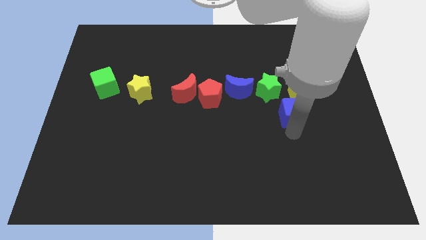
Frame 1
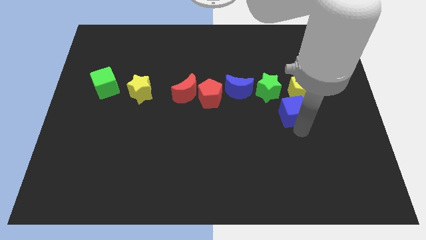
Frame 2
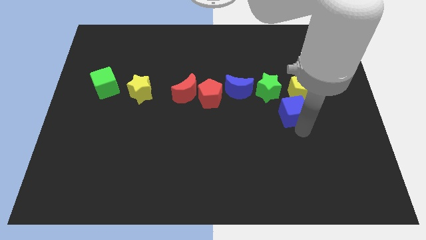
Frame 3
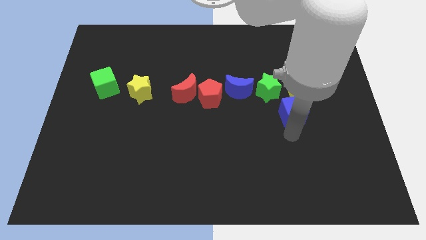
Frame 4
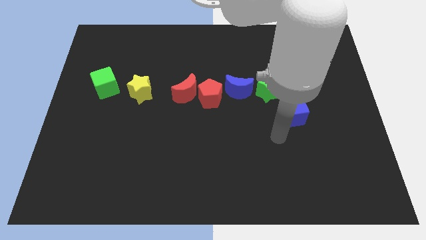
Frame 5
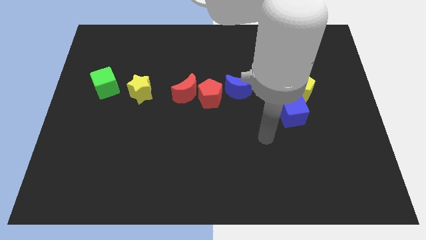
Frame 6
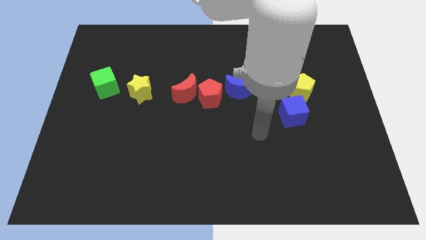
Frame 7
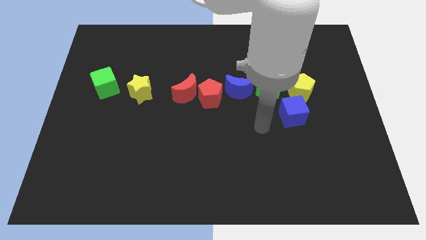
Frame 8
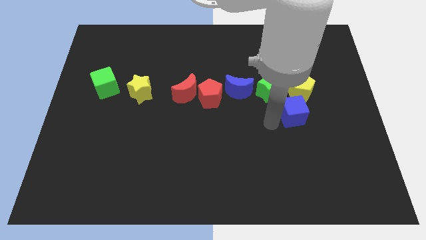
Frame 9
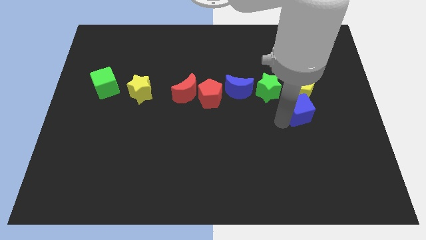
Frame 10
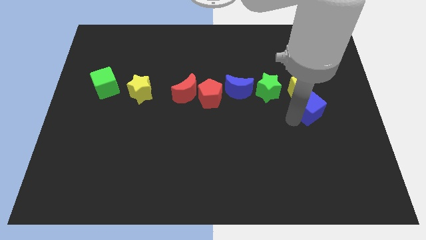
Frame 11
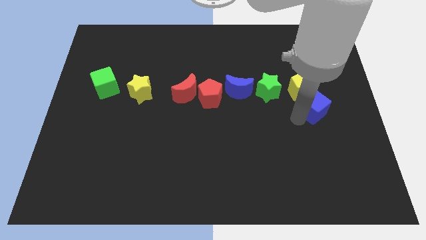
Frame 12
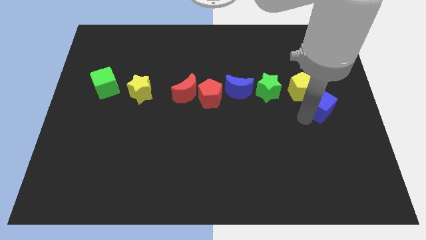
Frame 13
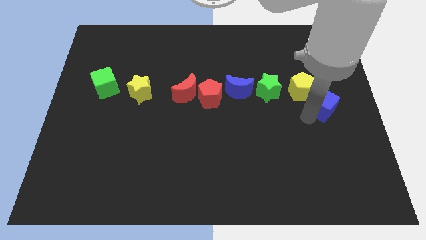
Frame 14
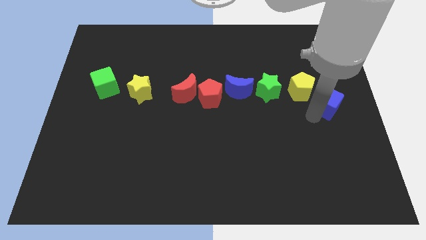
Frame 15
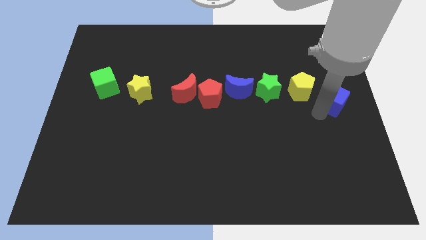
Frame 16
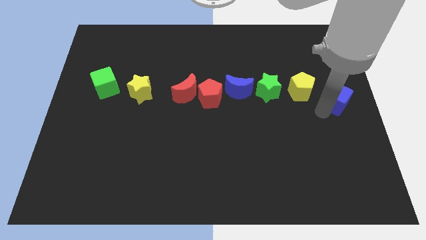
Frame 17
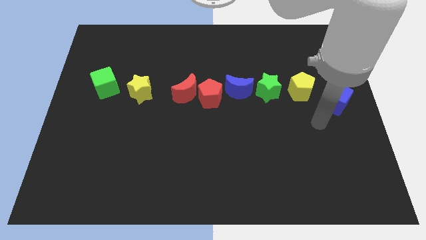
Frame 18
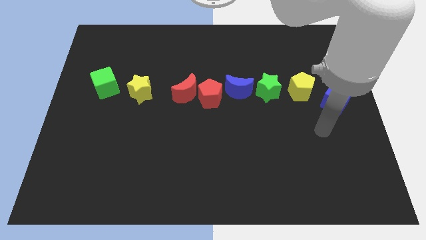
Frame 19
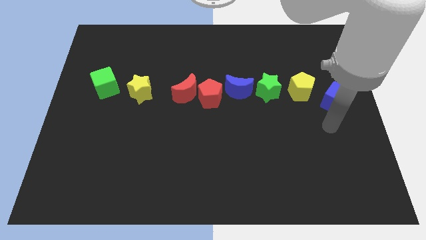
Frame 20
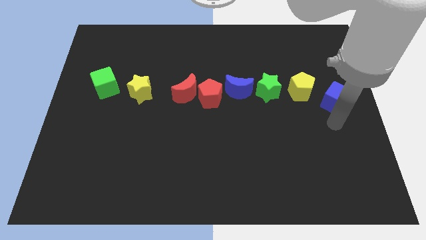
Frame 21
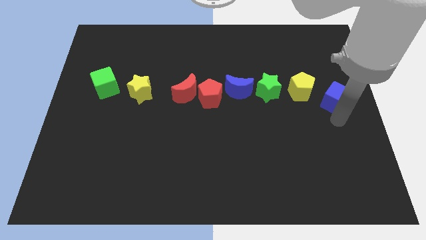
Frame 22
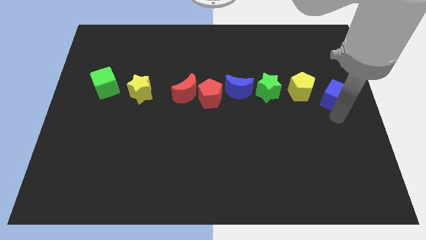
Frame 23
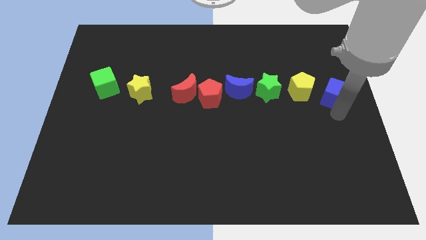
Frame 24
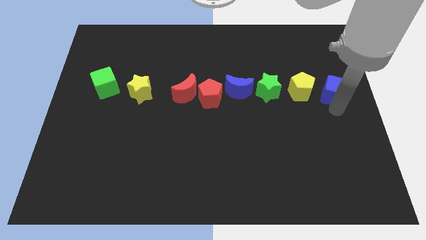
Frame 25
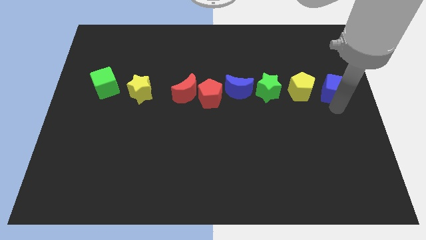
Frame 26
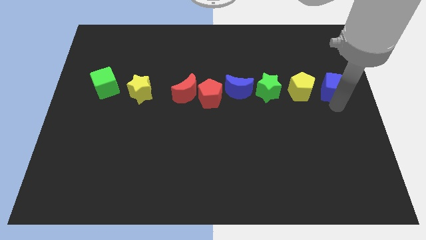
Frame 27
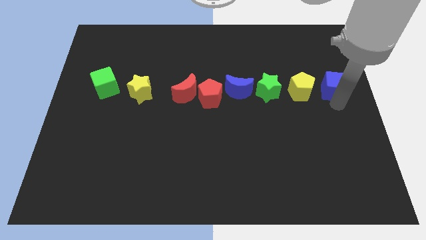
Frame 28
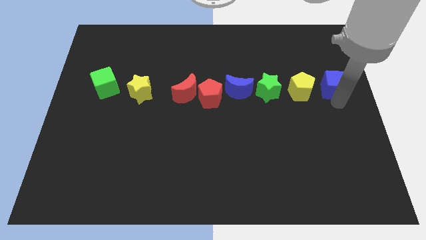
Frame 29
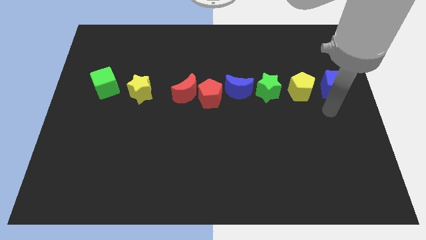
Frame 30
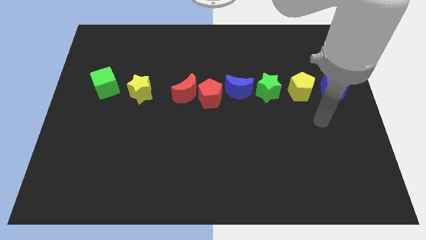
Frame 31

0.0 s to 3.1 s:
place the blue cube to the right of the yellow pentagon

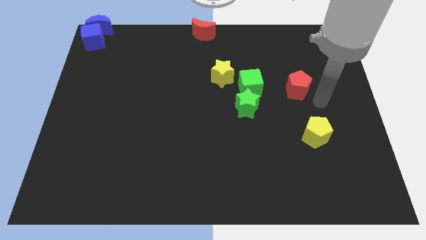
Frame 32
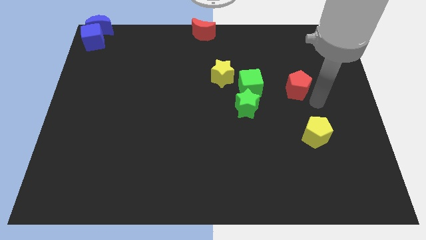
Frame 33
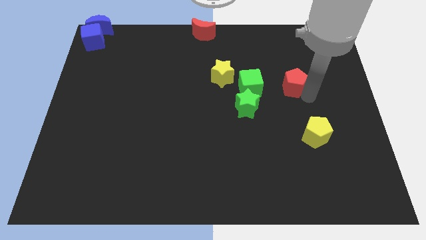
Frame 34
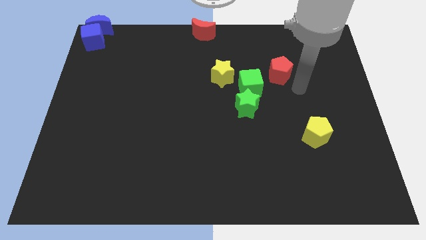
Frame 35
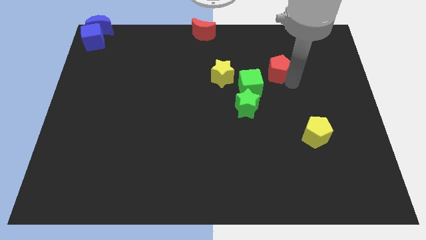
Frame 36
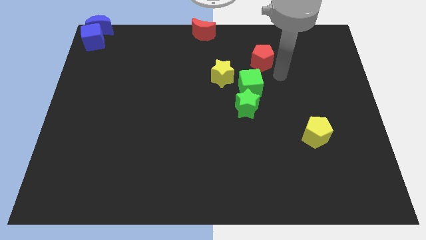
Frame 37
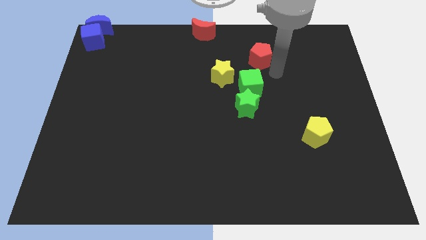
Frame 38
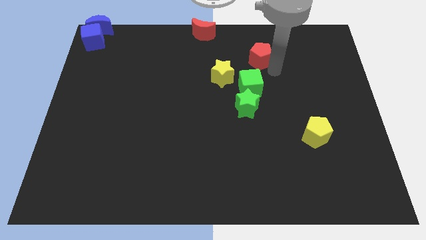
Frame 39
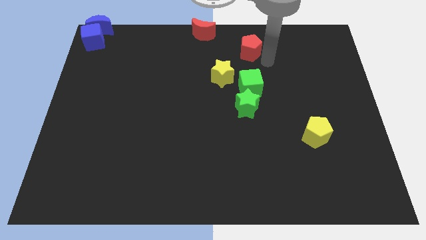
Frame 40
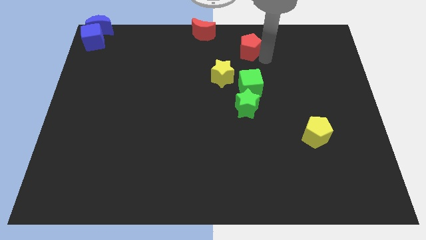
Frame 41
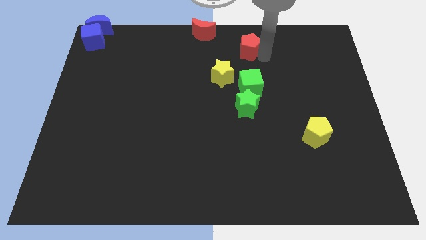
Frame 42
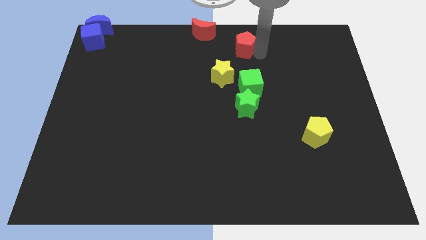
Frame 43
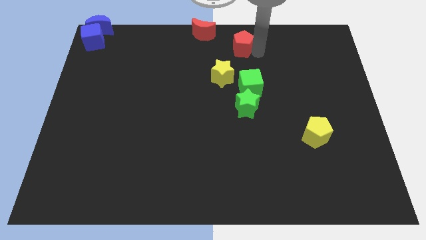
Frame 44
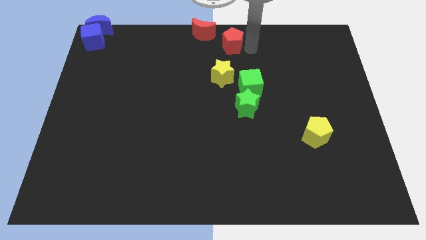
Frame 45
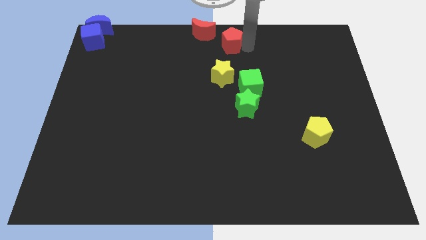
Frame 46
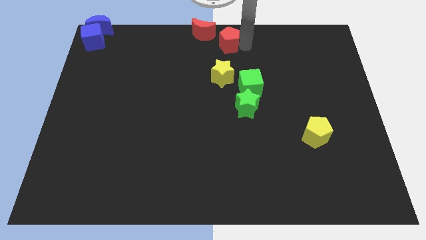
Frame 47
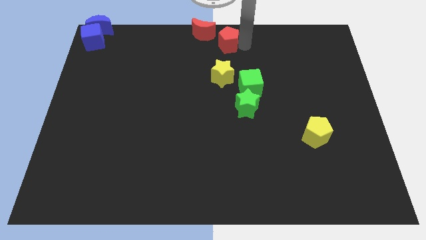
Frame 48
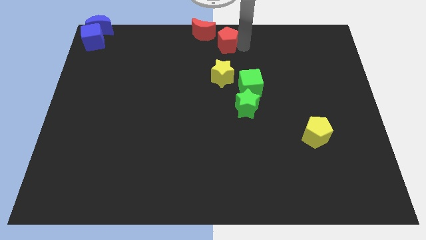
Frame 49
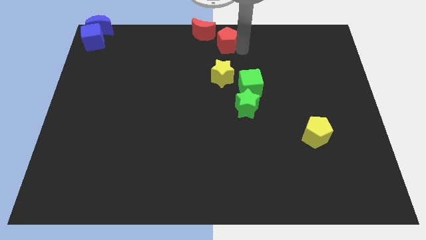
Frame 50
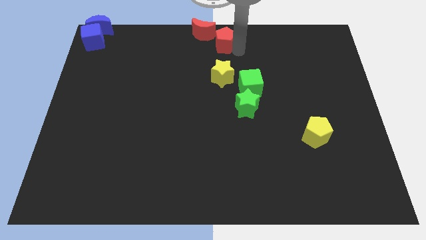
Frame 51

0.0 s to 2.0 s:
push the red pentagon to the top of the yellow star

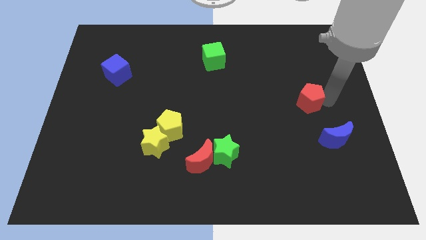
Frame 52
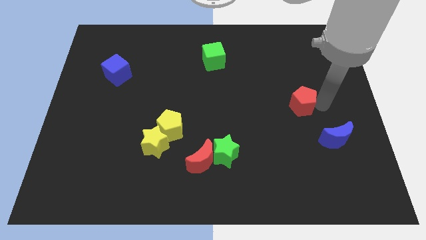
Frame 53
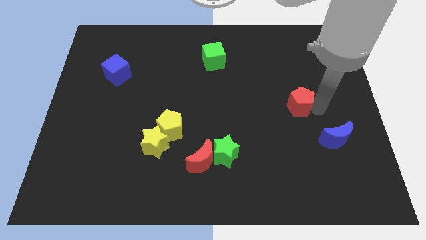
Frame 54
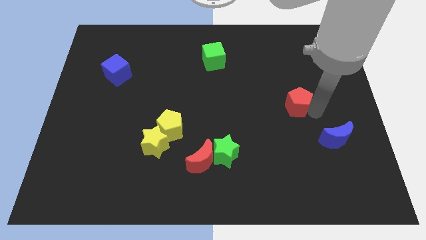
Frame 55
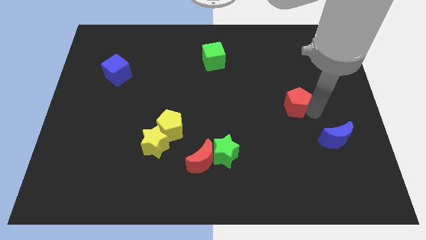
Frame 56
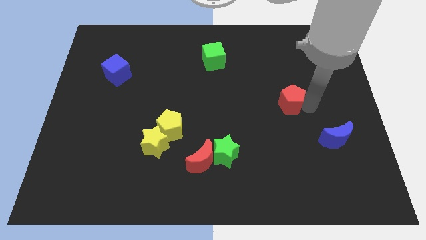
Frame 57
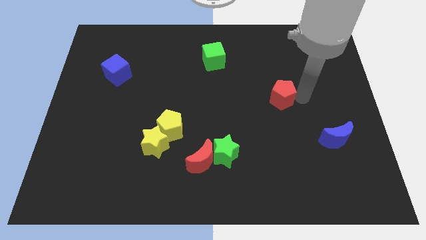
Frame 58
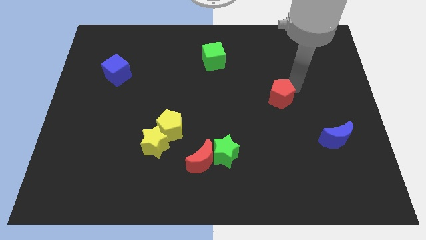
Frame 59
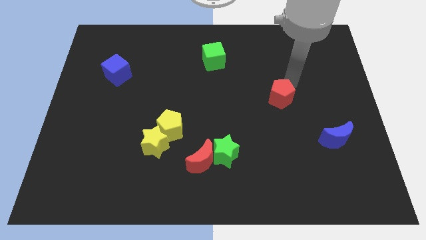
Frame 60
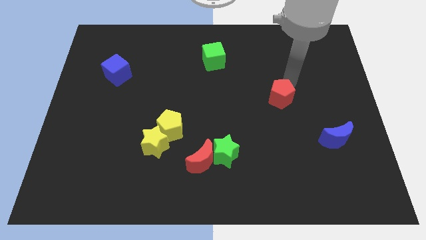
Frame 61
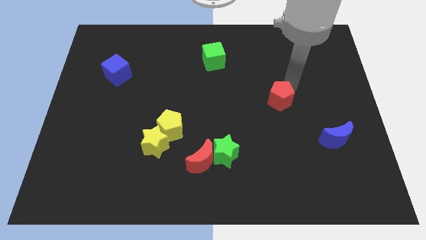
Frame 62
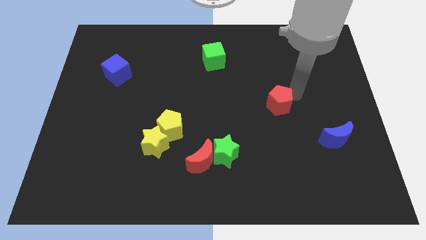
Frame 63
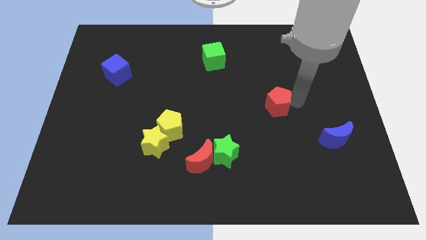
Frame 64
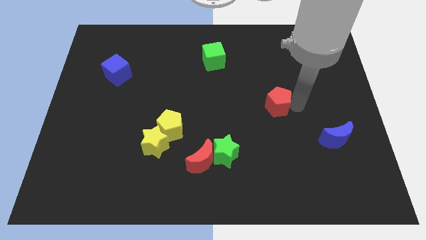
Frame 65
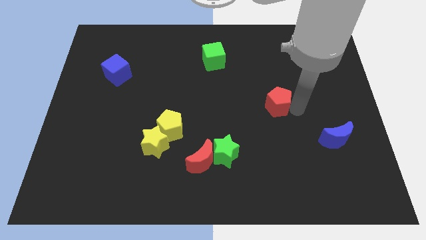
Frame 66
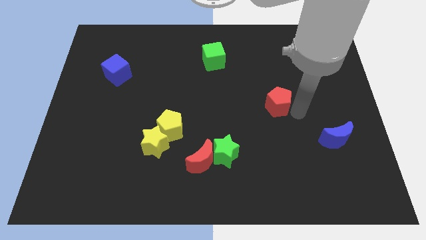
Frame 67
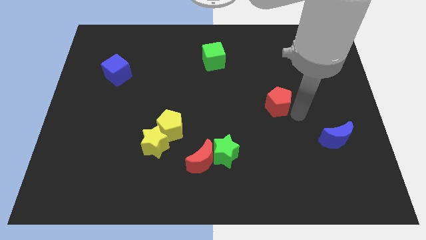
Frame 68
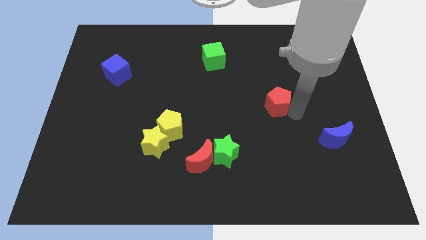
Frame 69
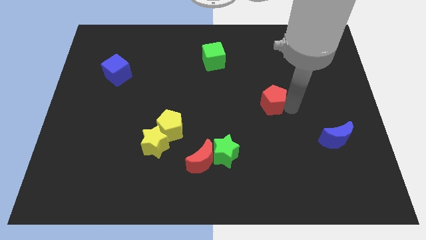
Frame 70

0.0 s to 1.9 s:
move the red pentagon towards the center of board

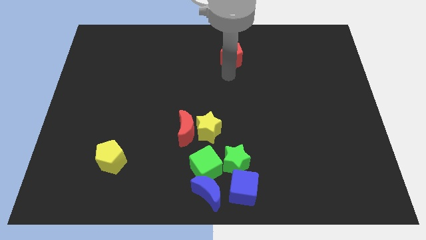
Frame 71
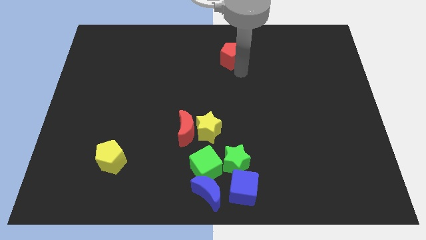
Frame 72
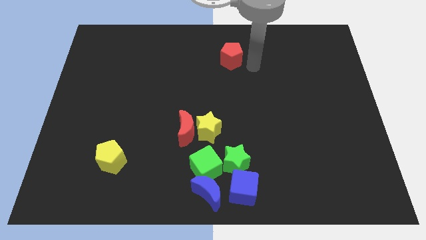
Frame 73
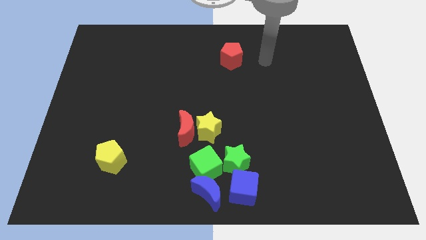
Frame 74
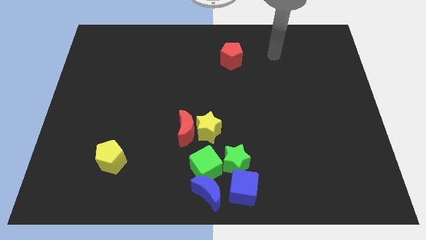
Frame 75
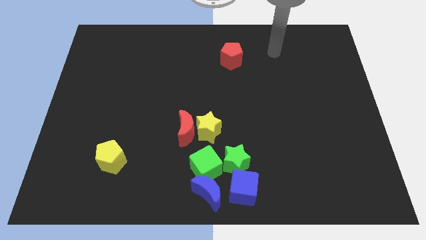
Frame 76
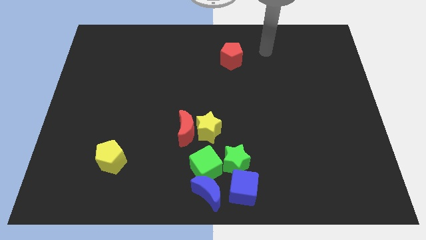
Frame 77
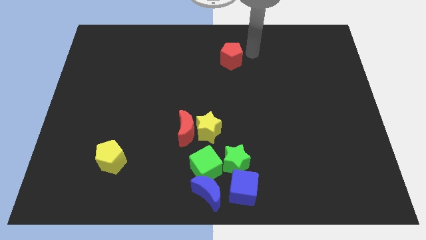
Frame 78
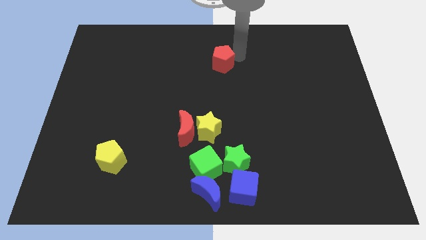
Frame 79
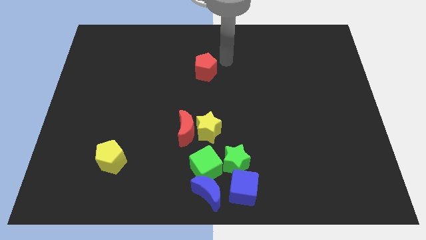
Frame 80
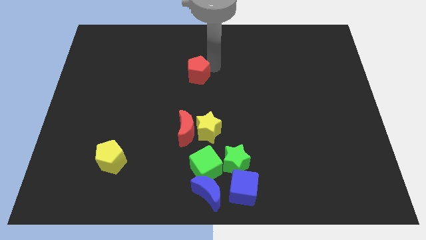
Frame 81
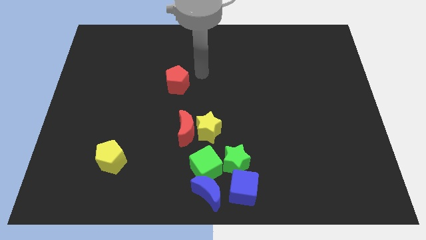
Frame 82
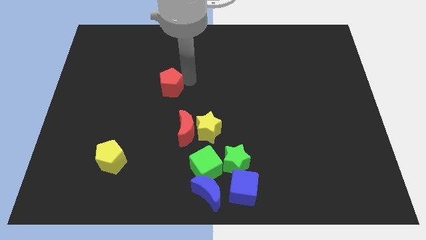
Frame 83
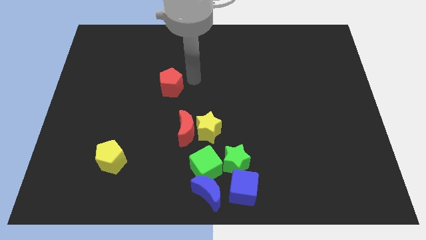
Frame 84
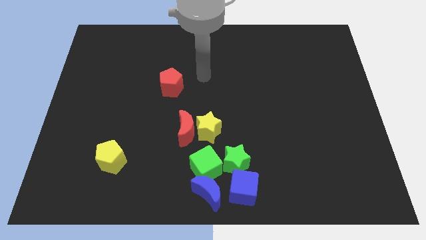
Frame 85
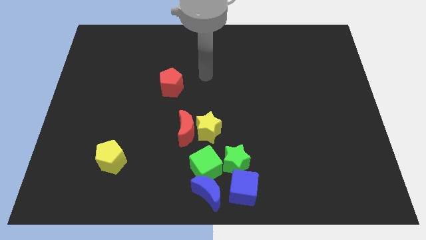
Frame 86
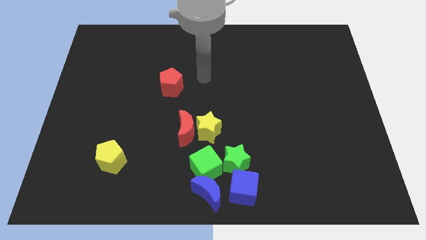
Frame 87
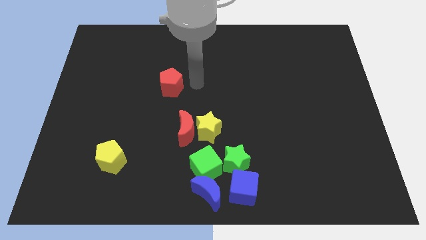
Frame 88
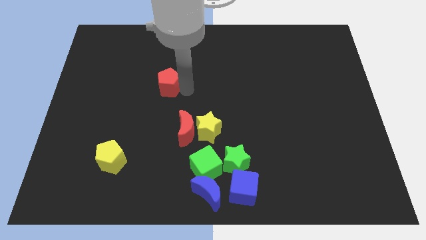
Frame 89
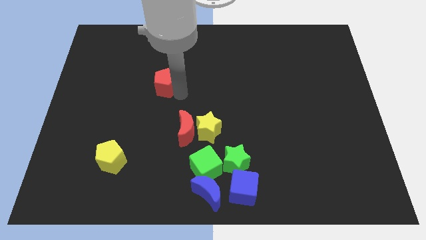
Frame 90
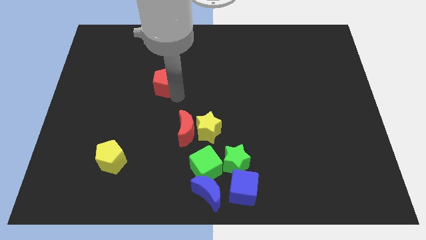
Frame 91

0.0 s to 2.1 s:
place the red pentagon on the top left of the red moon
